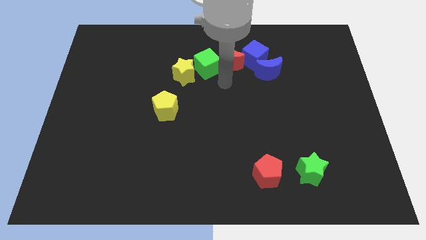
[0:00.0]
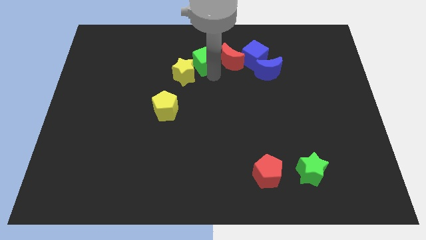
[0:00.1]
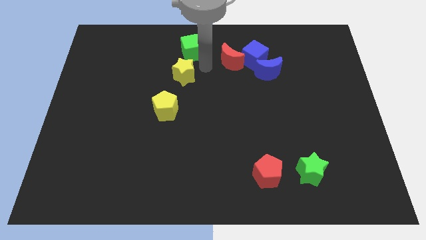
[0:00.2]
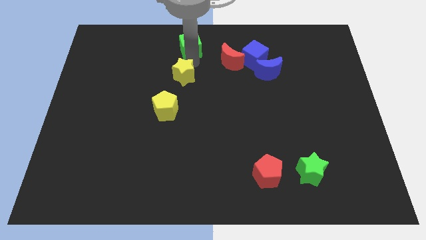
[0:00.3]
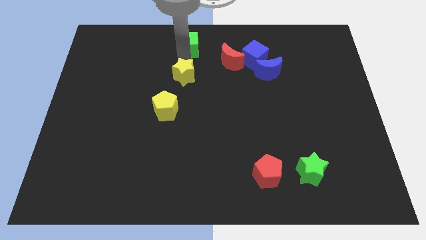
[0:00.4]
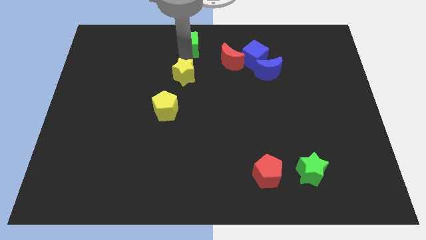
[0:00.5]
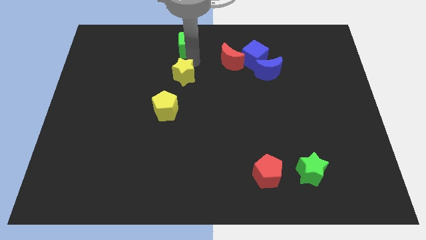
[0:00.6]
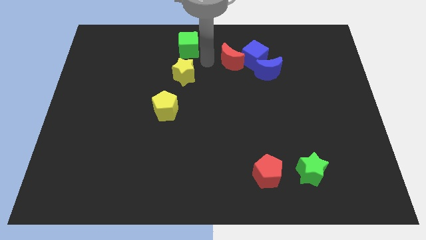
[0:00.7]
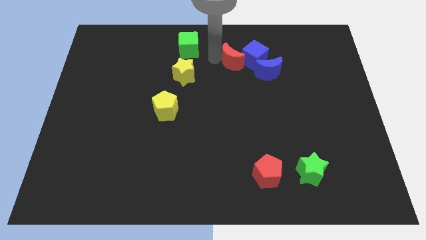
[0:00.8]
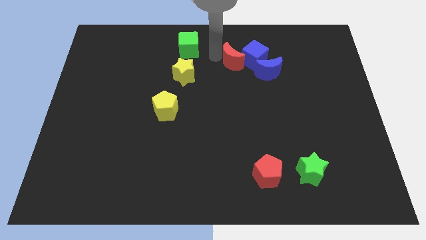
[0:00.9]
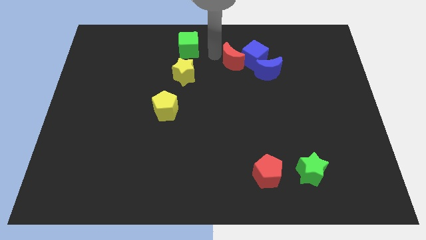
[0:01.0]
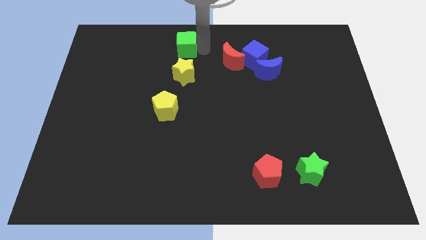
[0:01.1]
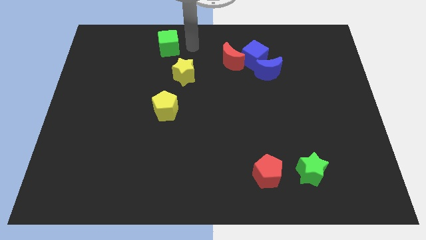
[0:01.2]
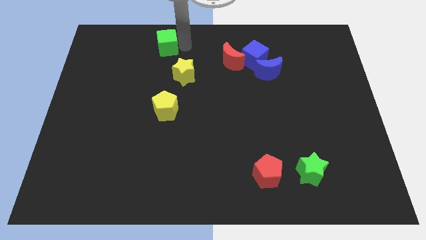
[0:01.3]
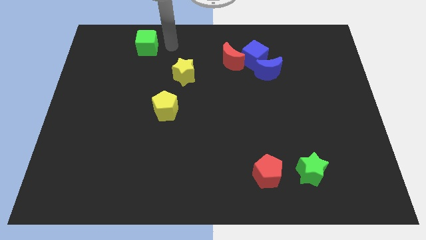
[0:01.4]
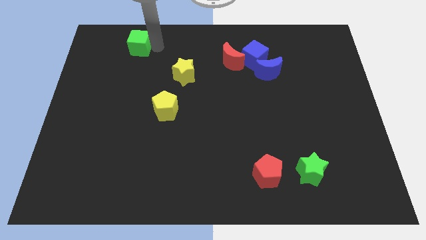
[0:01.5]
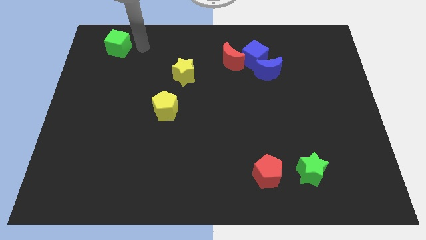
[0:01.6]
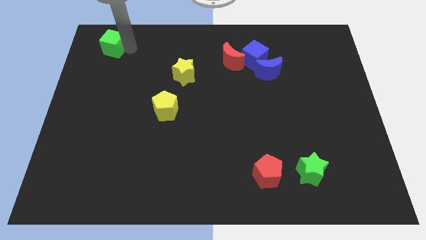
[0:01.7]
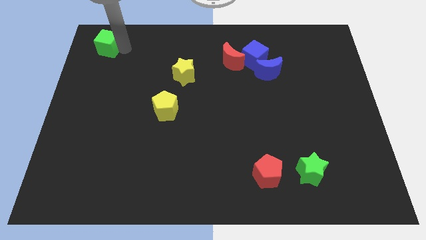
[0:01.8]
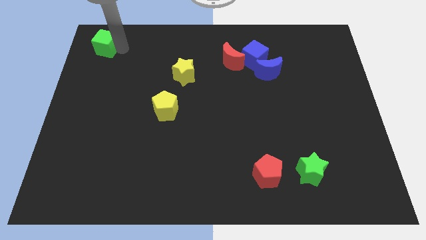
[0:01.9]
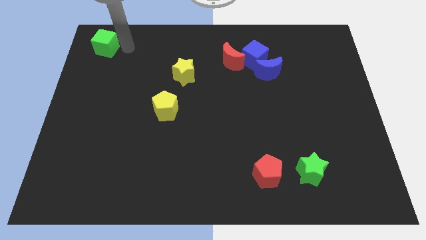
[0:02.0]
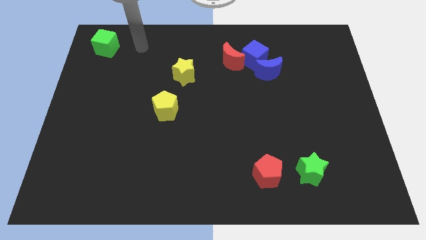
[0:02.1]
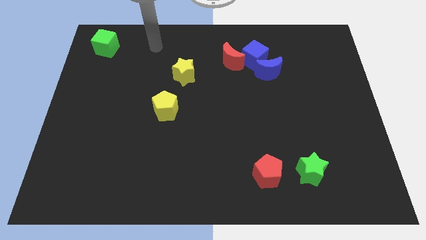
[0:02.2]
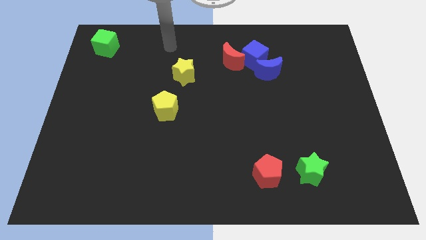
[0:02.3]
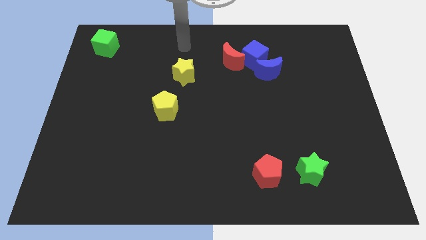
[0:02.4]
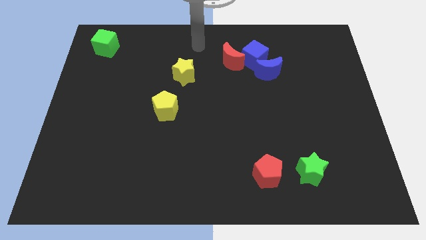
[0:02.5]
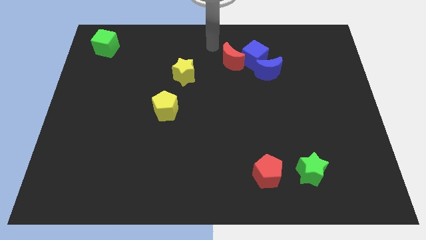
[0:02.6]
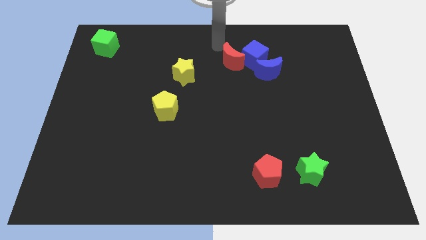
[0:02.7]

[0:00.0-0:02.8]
push the green cube towards the top left of the board

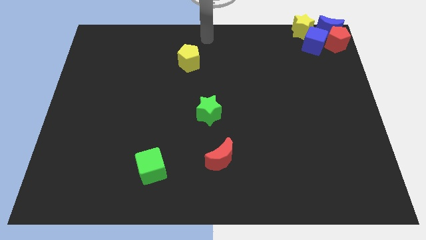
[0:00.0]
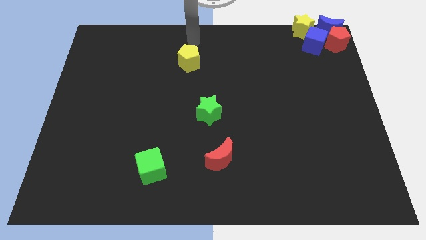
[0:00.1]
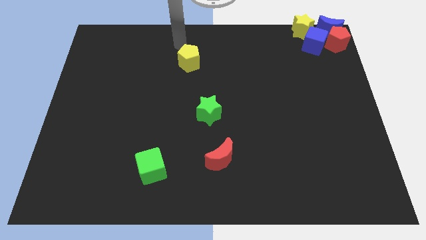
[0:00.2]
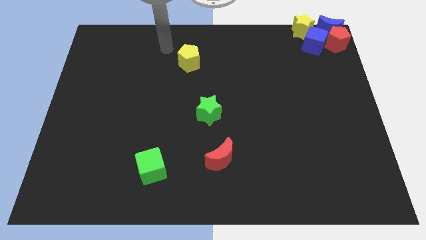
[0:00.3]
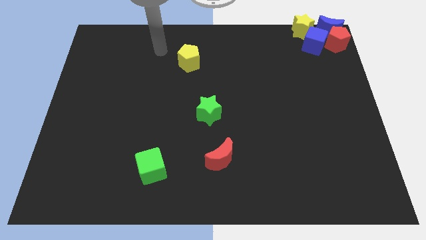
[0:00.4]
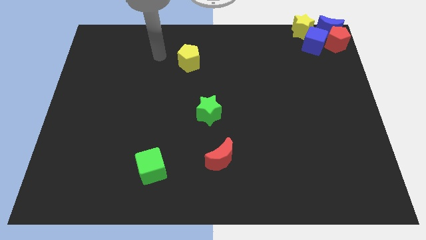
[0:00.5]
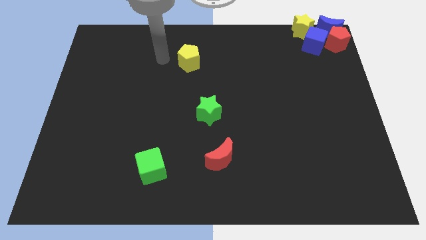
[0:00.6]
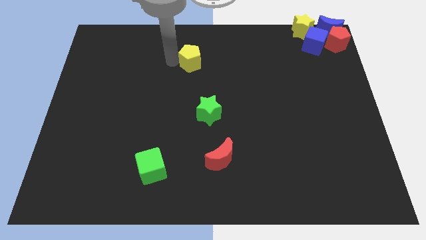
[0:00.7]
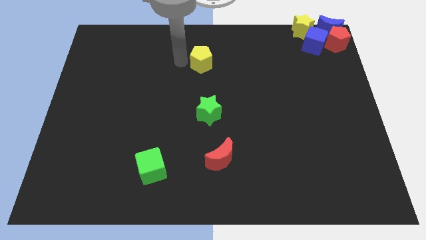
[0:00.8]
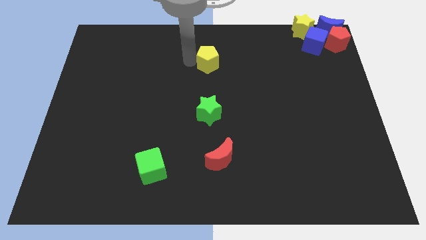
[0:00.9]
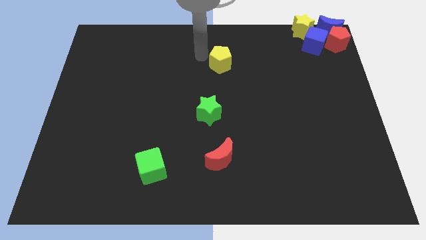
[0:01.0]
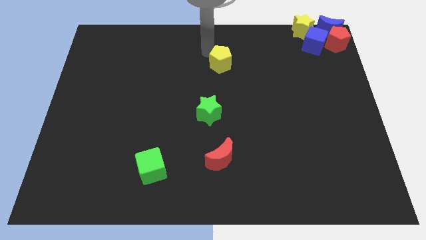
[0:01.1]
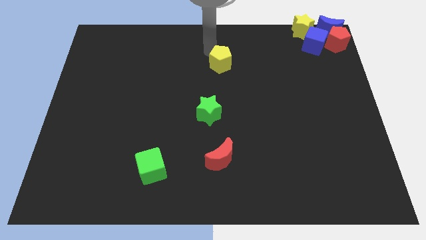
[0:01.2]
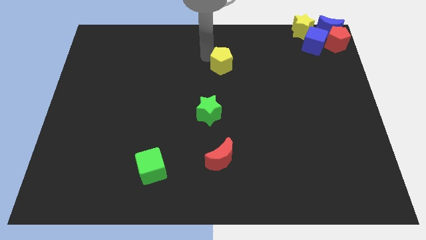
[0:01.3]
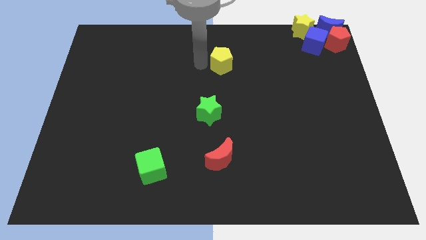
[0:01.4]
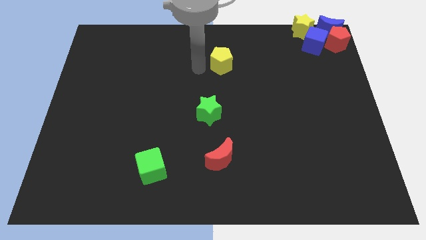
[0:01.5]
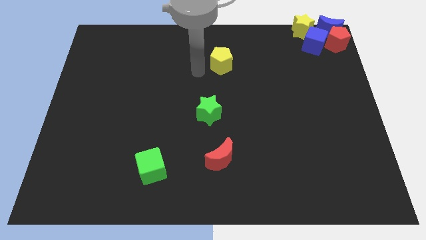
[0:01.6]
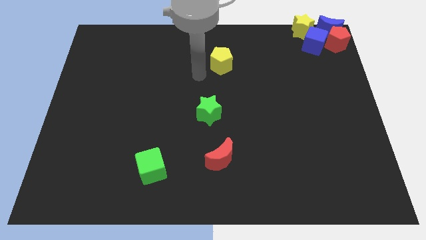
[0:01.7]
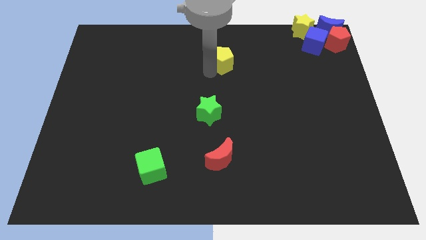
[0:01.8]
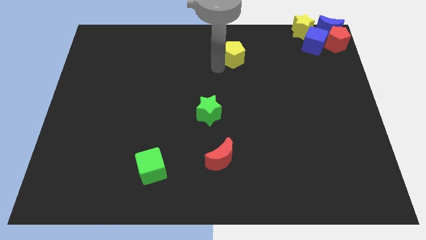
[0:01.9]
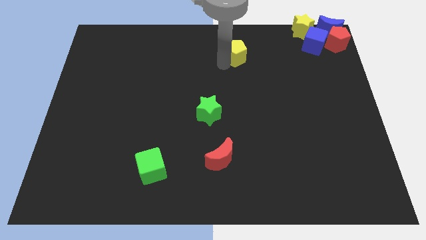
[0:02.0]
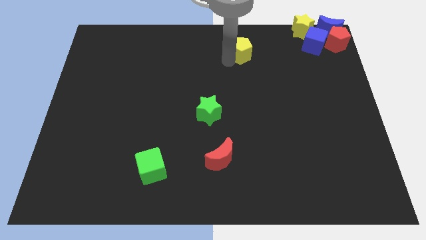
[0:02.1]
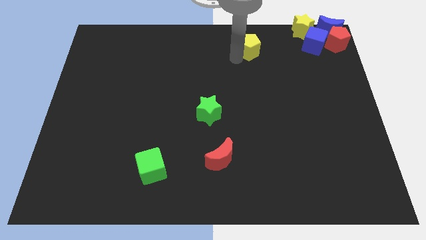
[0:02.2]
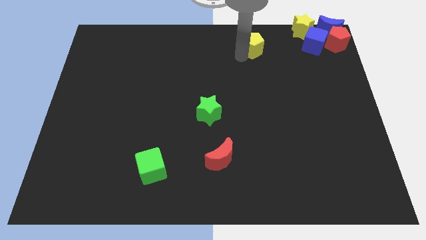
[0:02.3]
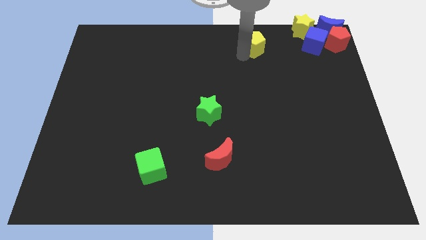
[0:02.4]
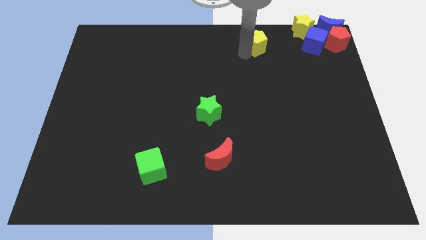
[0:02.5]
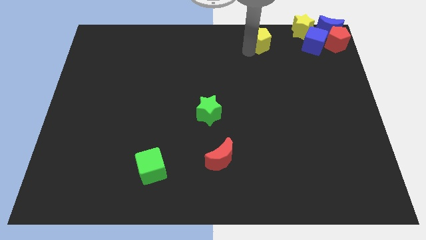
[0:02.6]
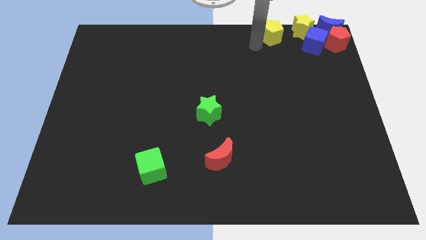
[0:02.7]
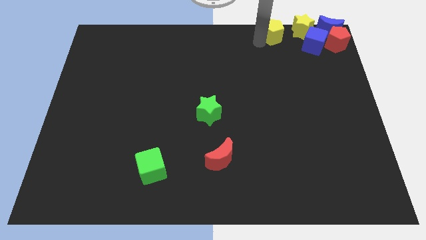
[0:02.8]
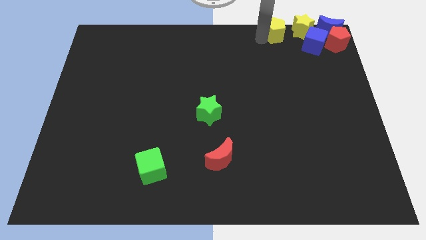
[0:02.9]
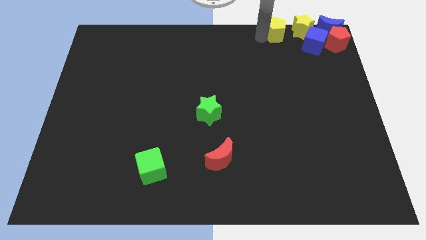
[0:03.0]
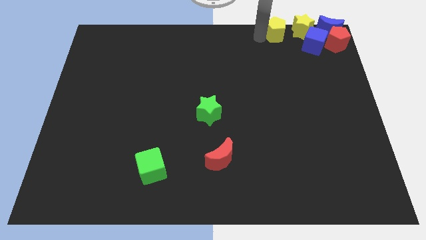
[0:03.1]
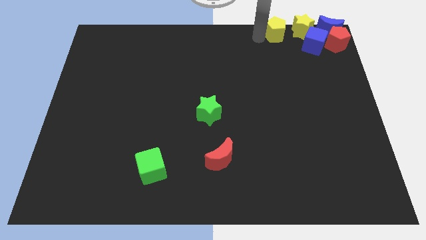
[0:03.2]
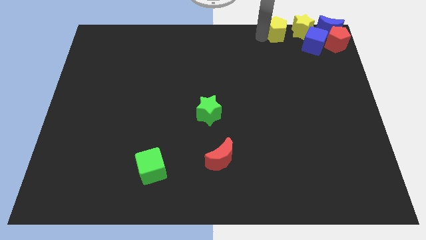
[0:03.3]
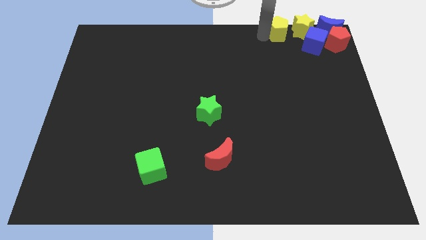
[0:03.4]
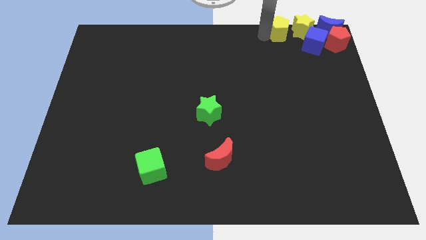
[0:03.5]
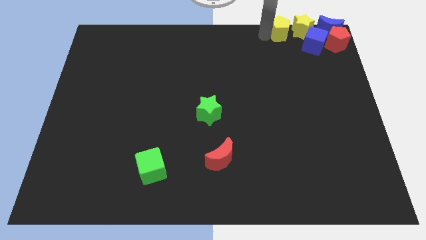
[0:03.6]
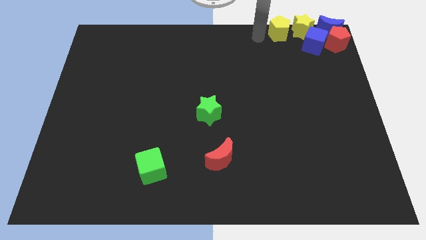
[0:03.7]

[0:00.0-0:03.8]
put the yellow pentagon to the left of the yellow star

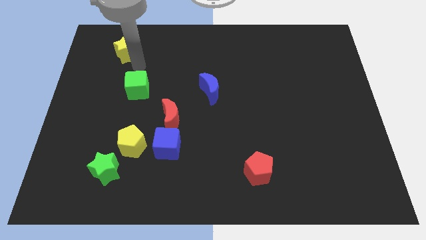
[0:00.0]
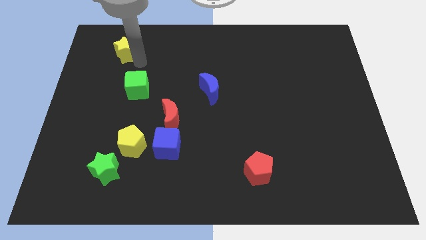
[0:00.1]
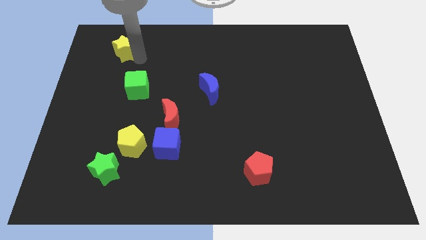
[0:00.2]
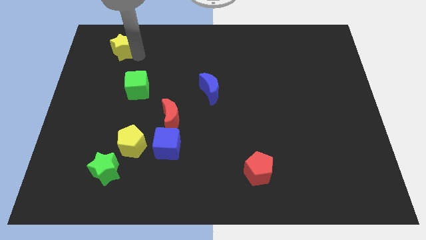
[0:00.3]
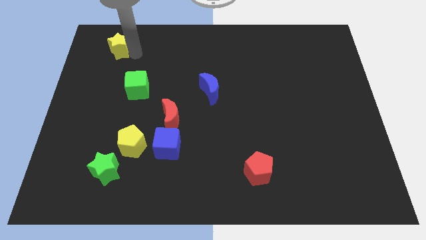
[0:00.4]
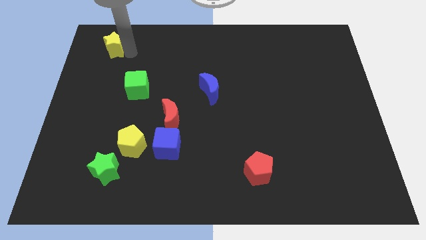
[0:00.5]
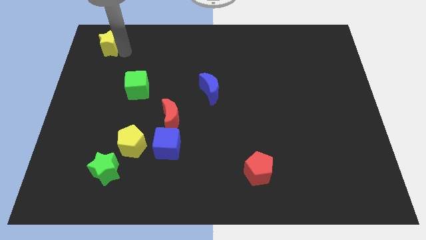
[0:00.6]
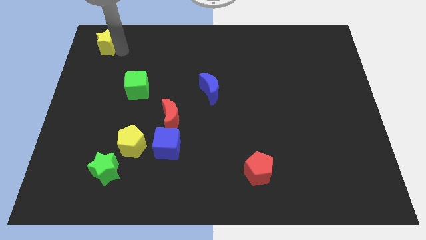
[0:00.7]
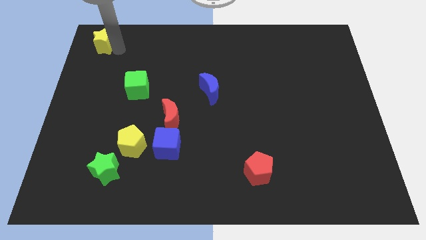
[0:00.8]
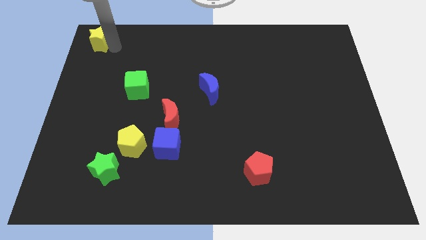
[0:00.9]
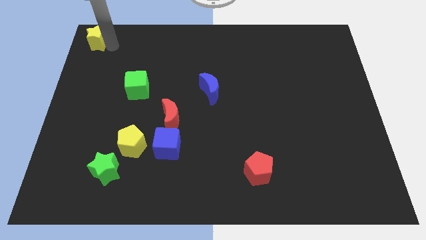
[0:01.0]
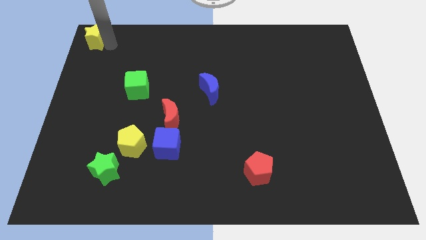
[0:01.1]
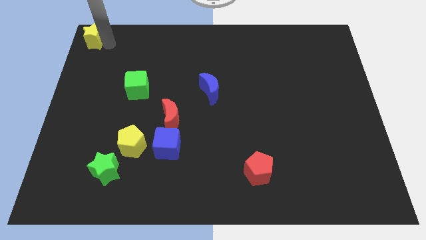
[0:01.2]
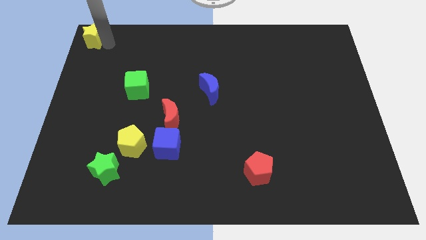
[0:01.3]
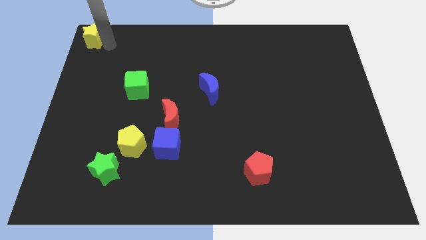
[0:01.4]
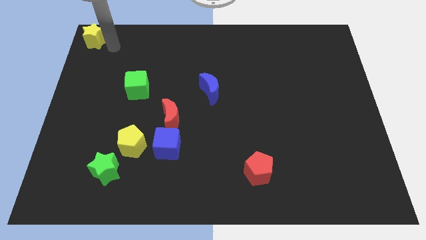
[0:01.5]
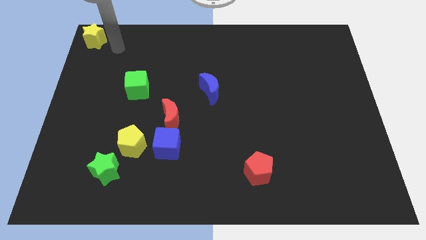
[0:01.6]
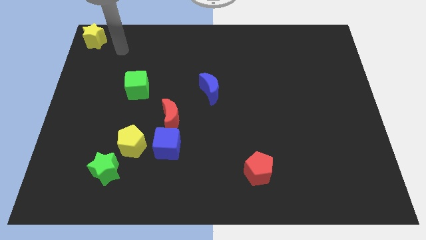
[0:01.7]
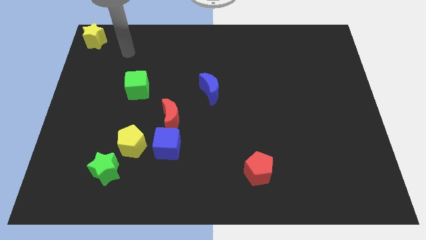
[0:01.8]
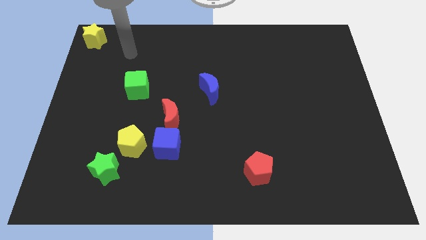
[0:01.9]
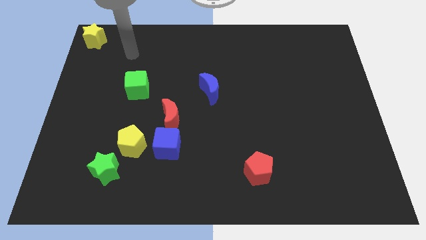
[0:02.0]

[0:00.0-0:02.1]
move the yellow star to the top left corner of the board

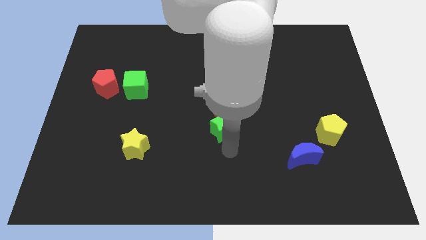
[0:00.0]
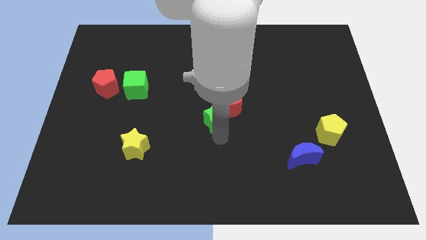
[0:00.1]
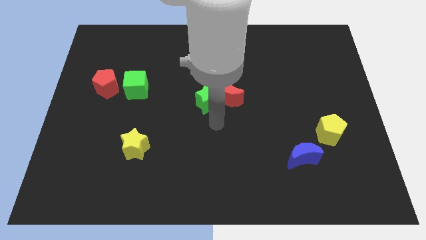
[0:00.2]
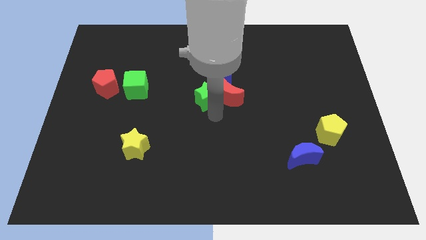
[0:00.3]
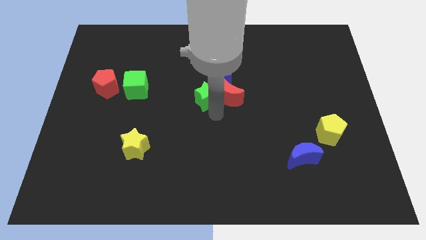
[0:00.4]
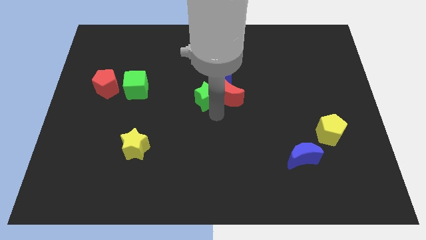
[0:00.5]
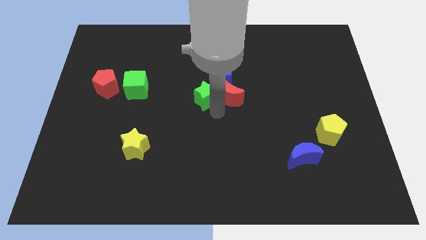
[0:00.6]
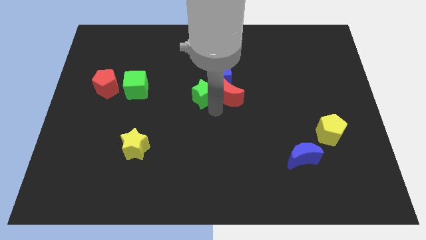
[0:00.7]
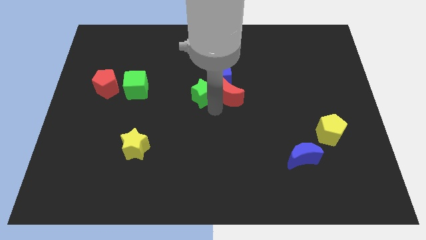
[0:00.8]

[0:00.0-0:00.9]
place the green star to the left of the red moon
